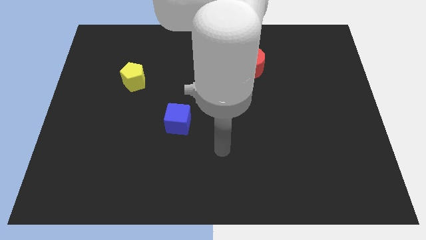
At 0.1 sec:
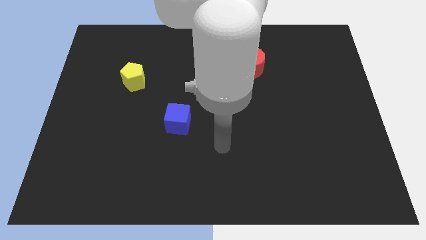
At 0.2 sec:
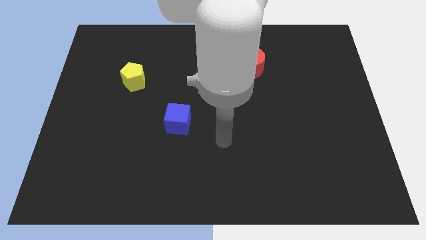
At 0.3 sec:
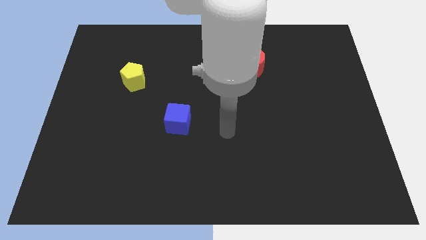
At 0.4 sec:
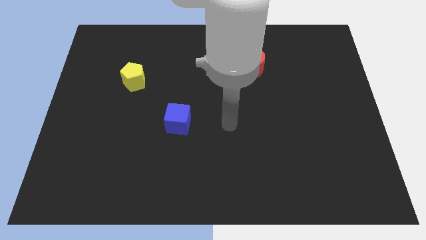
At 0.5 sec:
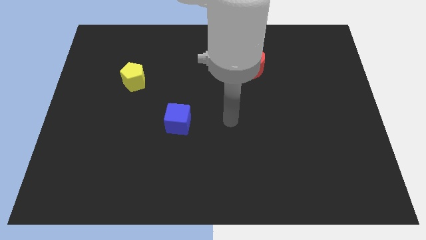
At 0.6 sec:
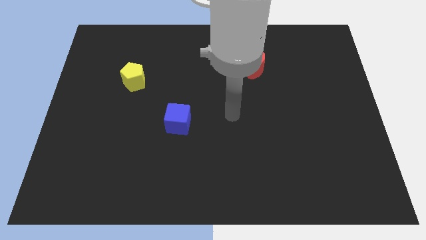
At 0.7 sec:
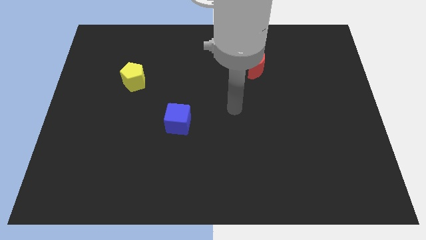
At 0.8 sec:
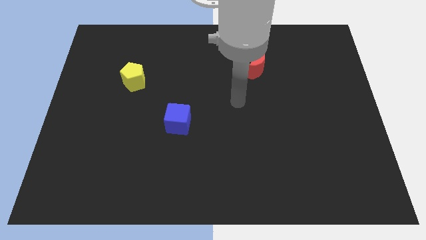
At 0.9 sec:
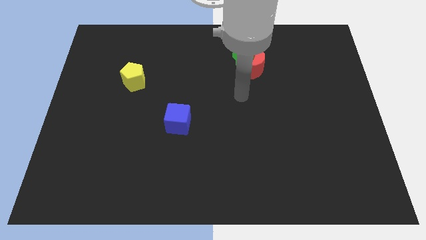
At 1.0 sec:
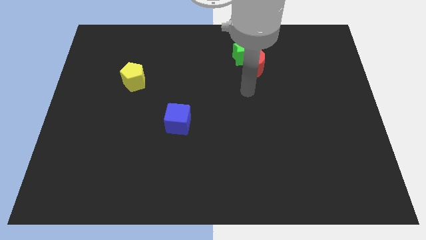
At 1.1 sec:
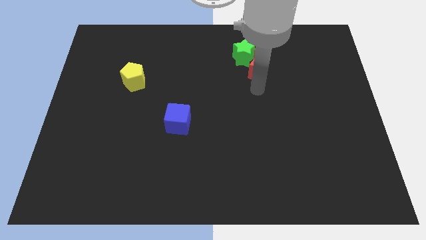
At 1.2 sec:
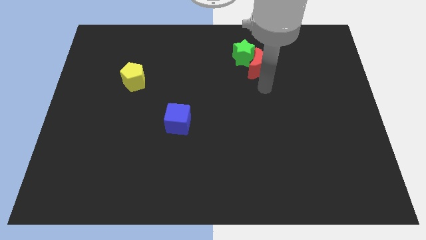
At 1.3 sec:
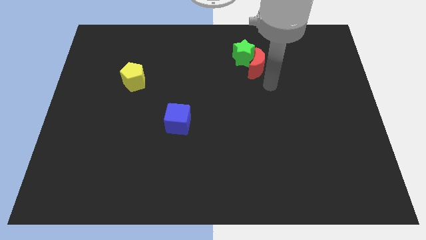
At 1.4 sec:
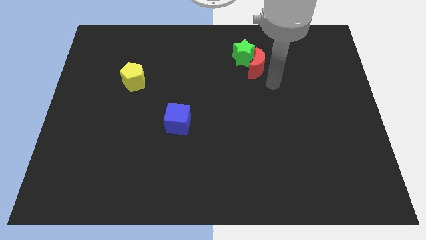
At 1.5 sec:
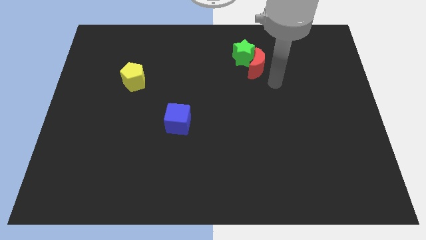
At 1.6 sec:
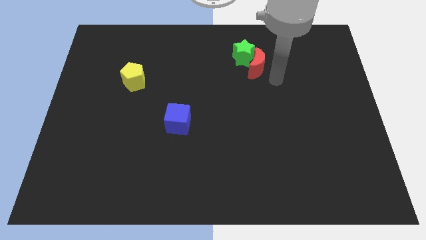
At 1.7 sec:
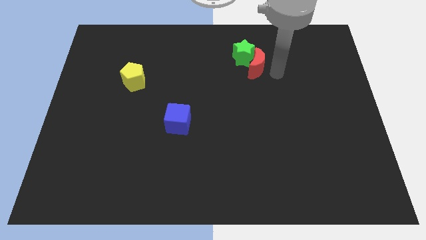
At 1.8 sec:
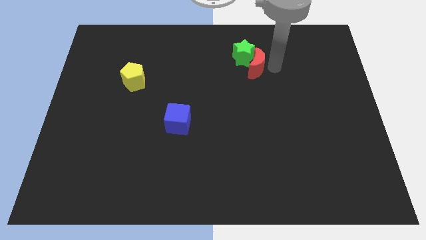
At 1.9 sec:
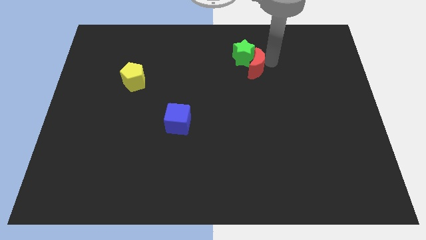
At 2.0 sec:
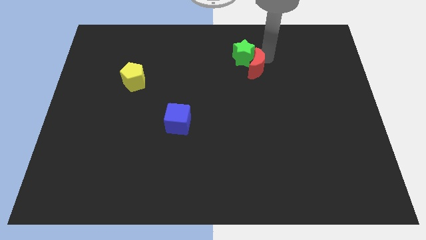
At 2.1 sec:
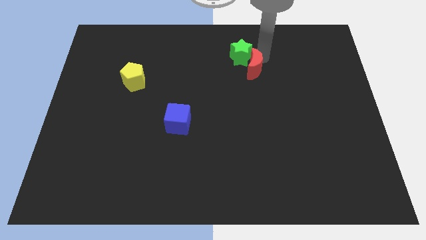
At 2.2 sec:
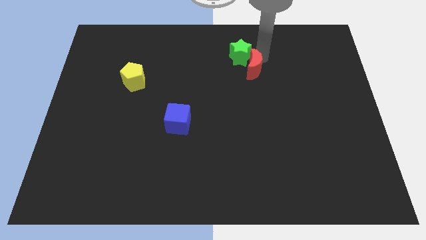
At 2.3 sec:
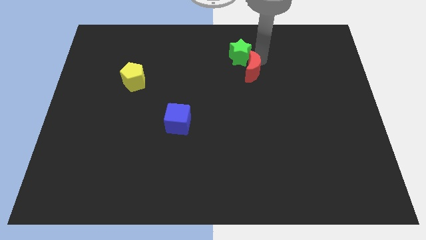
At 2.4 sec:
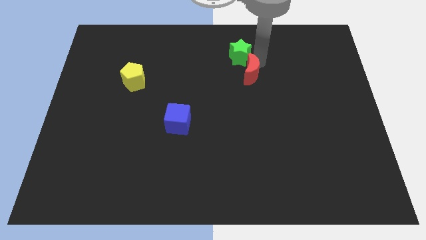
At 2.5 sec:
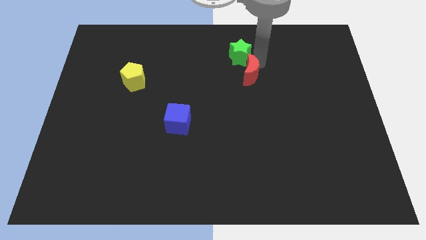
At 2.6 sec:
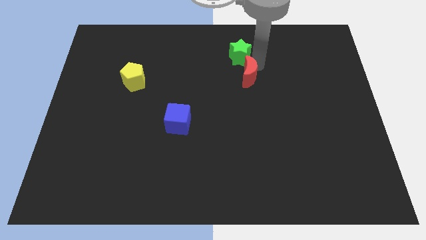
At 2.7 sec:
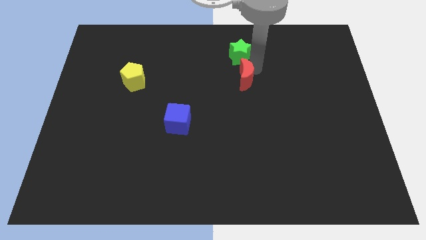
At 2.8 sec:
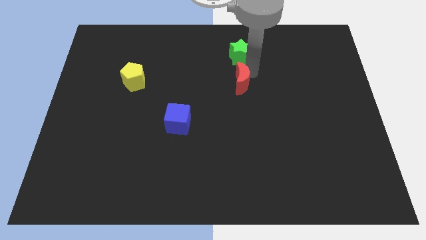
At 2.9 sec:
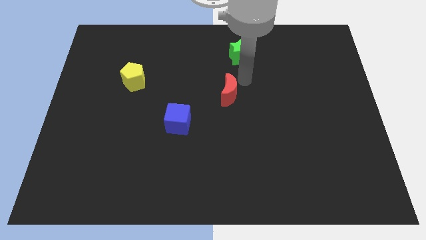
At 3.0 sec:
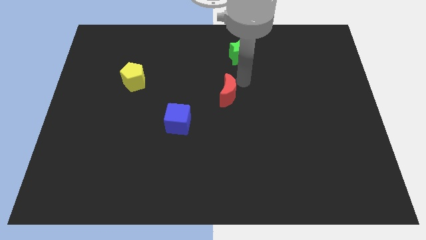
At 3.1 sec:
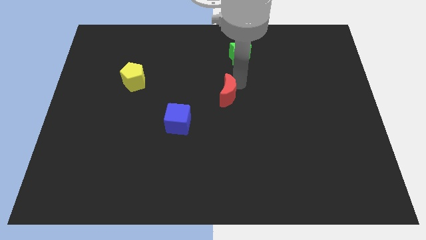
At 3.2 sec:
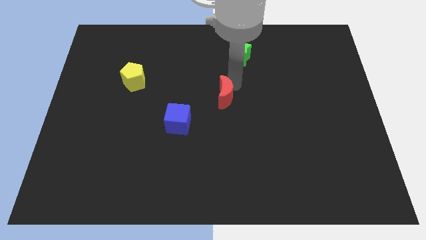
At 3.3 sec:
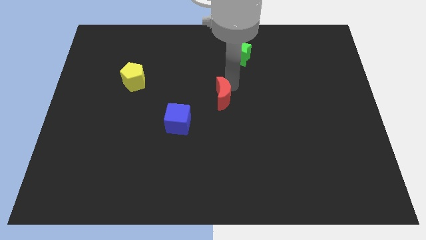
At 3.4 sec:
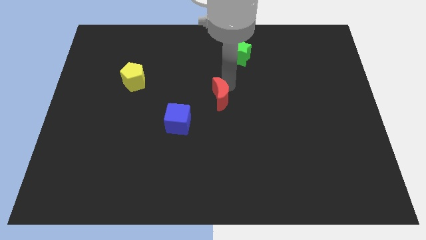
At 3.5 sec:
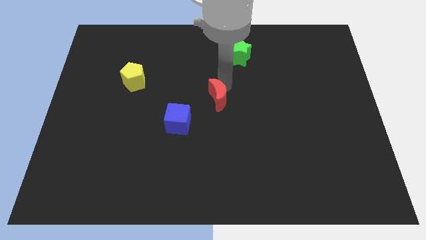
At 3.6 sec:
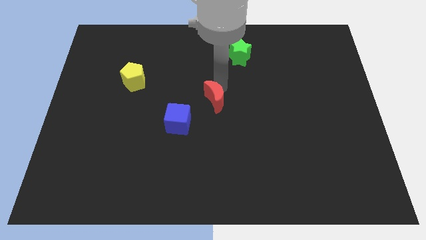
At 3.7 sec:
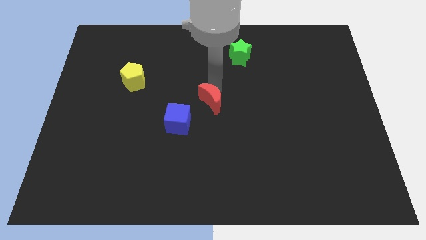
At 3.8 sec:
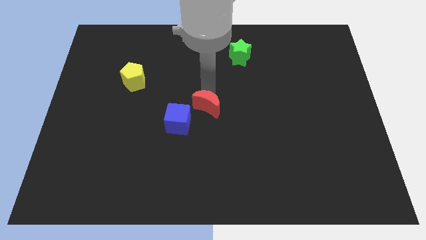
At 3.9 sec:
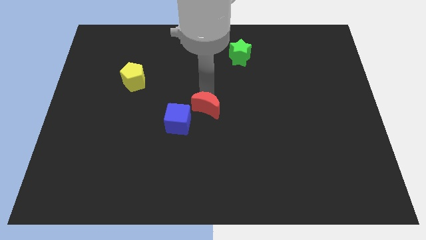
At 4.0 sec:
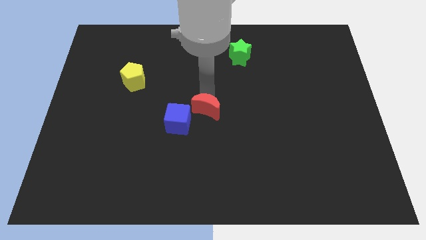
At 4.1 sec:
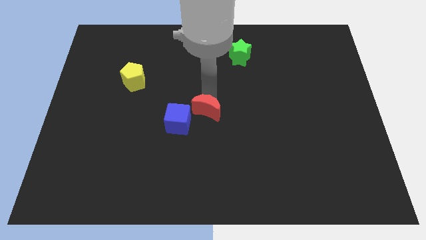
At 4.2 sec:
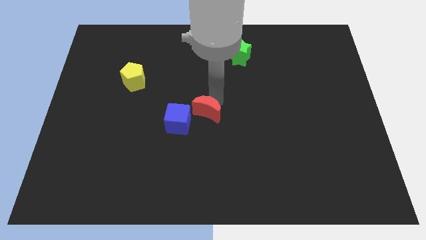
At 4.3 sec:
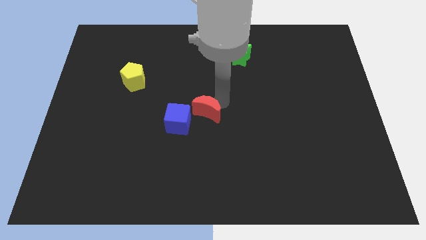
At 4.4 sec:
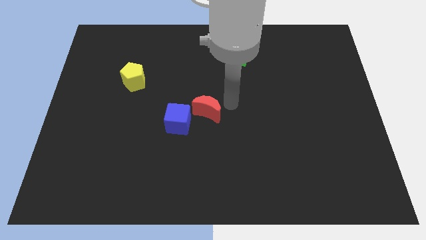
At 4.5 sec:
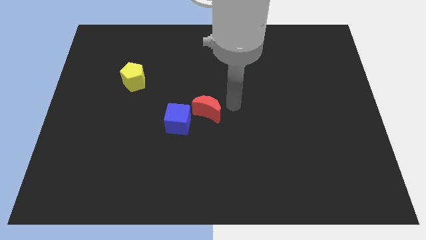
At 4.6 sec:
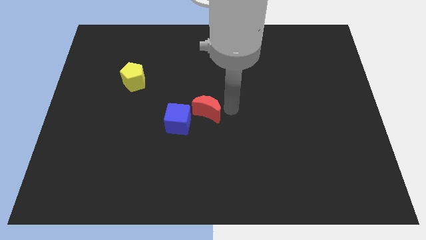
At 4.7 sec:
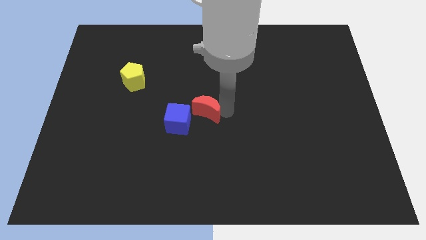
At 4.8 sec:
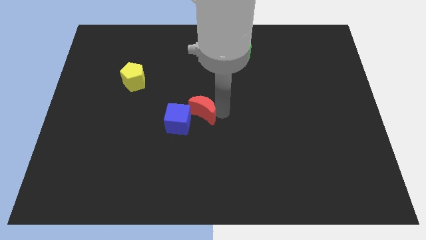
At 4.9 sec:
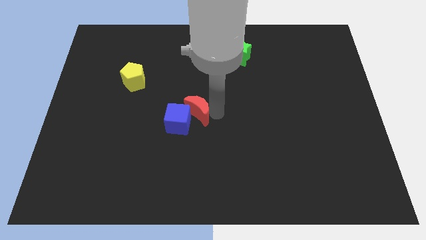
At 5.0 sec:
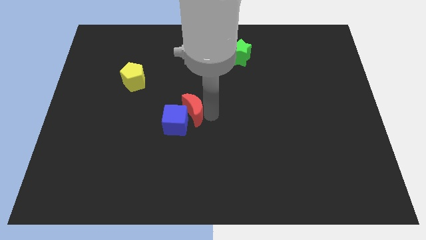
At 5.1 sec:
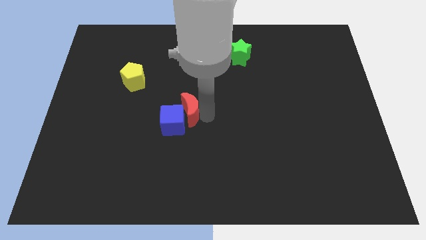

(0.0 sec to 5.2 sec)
push the red moon towards the cube

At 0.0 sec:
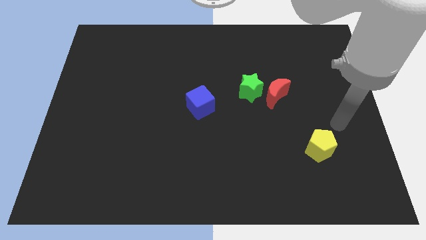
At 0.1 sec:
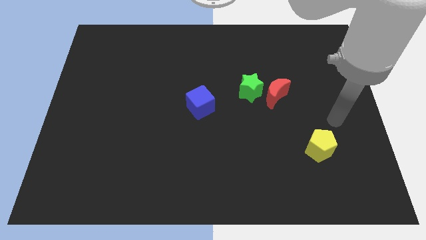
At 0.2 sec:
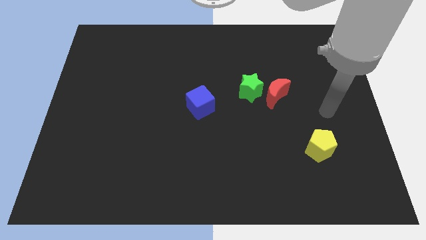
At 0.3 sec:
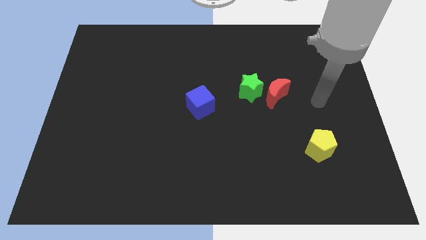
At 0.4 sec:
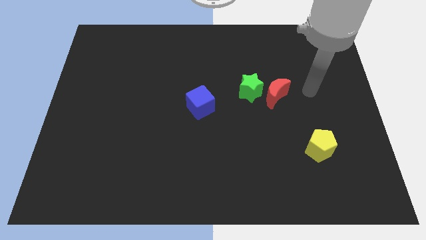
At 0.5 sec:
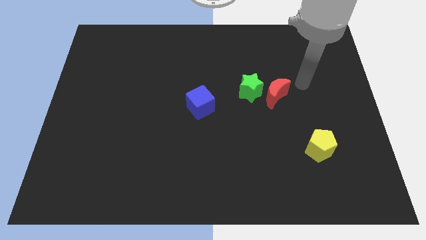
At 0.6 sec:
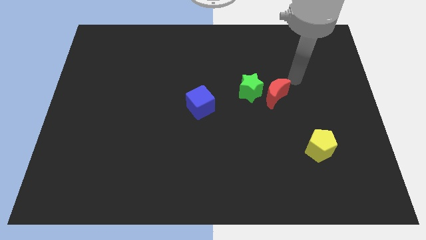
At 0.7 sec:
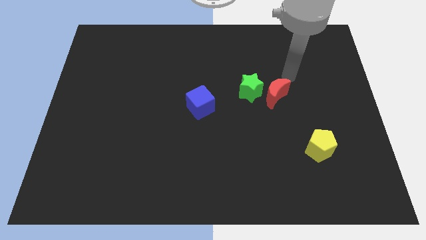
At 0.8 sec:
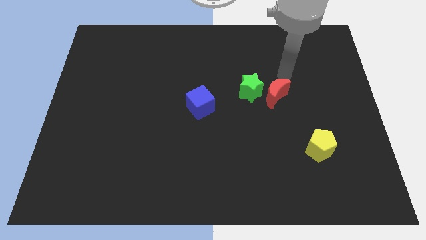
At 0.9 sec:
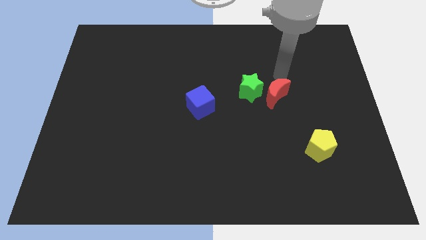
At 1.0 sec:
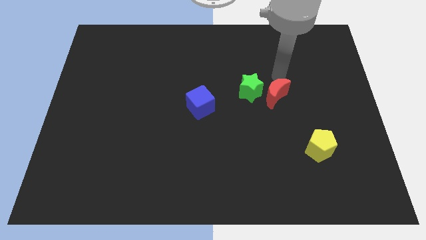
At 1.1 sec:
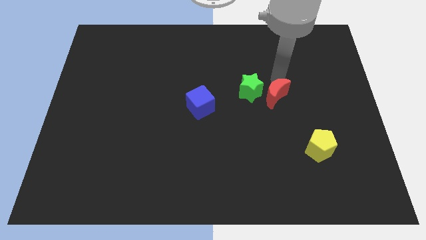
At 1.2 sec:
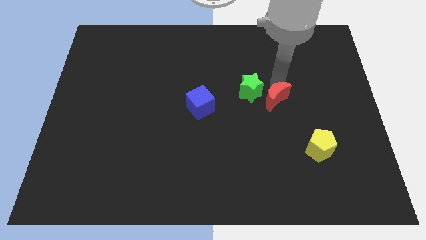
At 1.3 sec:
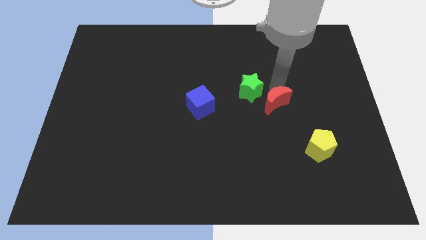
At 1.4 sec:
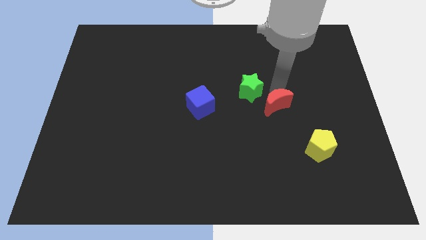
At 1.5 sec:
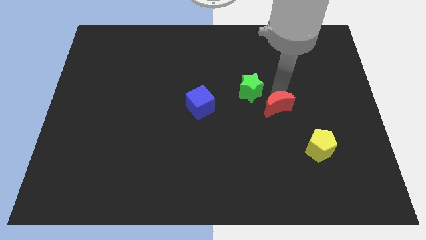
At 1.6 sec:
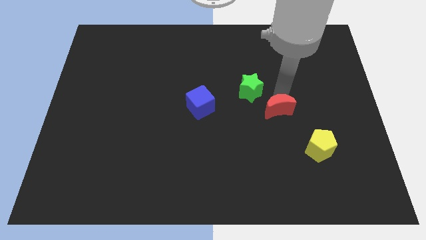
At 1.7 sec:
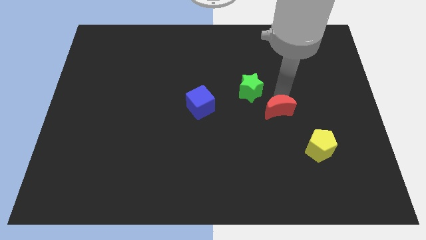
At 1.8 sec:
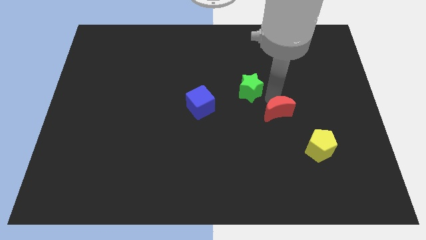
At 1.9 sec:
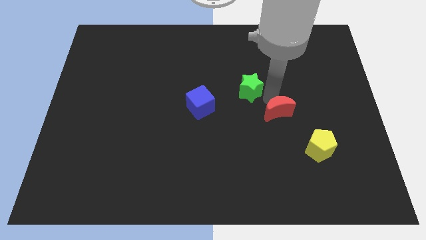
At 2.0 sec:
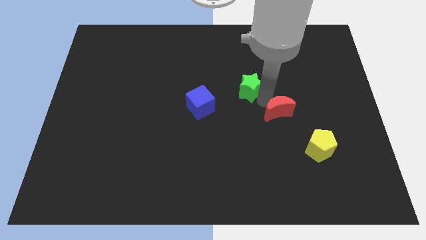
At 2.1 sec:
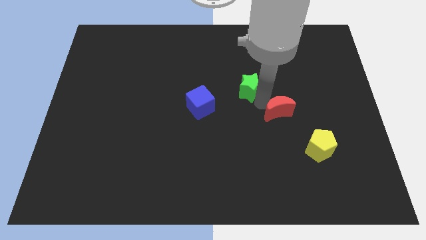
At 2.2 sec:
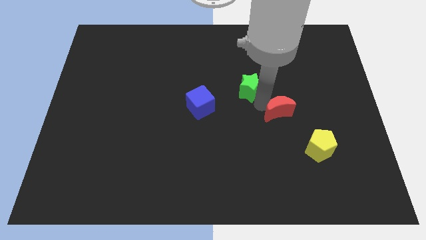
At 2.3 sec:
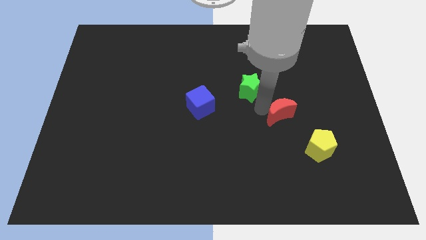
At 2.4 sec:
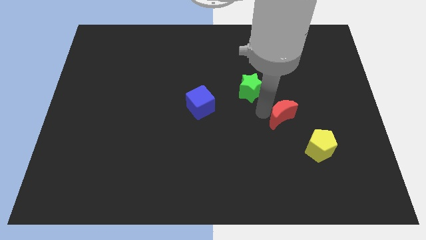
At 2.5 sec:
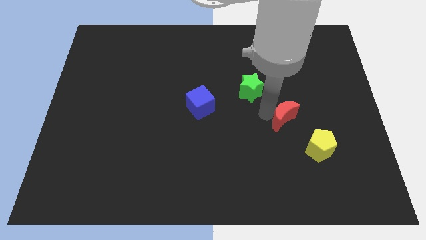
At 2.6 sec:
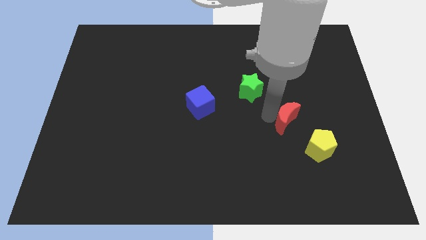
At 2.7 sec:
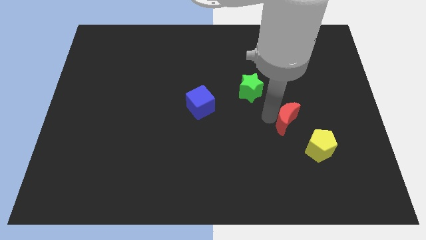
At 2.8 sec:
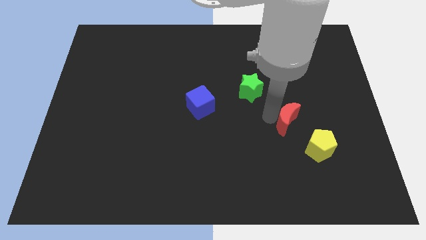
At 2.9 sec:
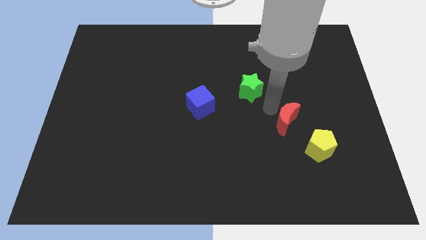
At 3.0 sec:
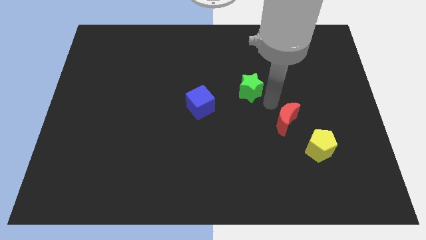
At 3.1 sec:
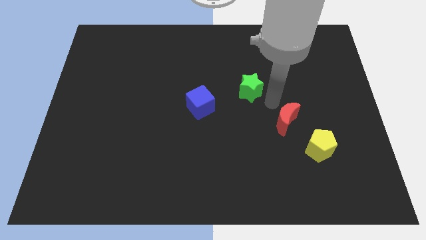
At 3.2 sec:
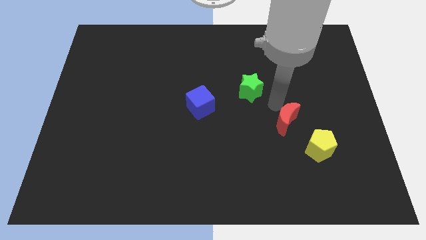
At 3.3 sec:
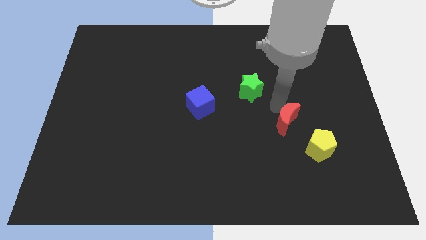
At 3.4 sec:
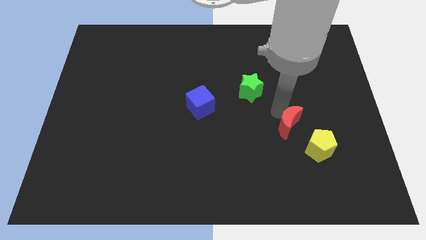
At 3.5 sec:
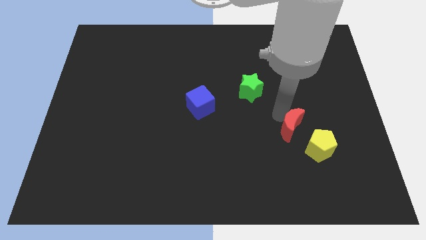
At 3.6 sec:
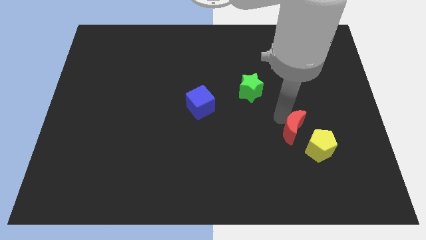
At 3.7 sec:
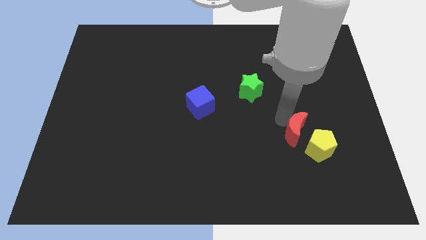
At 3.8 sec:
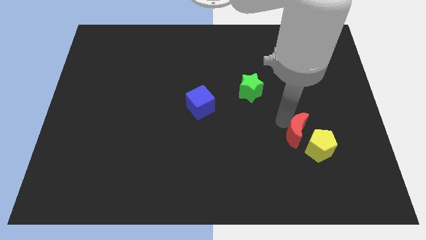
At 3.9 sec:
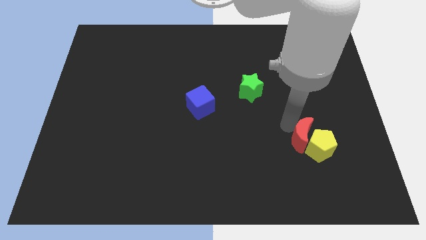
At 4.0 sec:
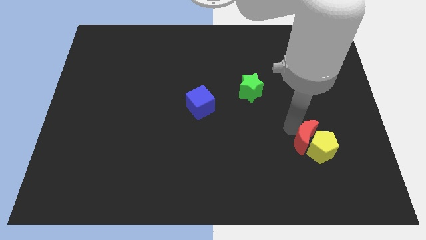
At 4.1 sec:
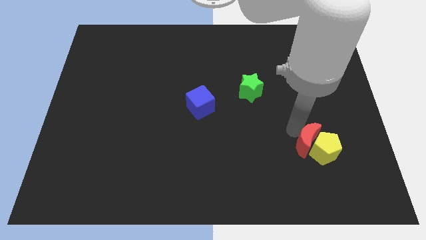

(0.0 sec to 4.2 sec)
put the moon close to the yellow pentagon
